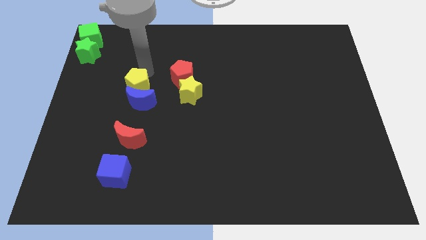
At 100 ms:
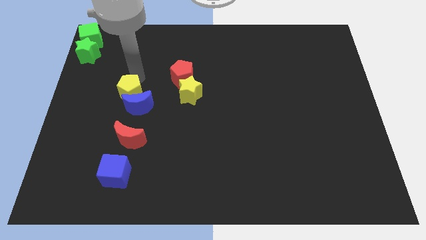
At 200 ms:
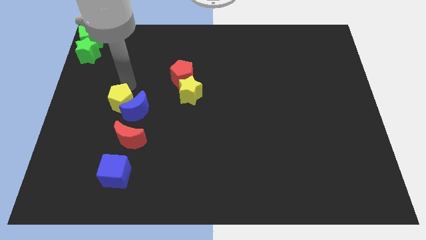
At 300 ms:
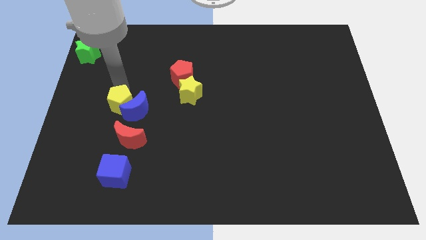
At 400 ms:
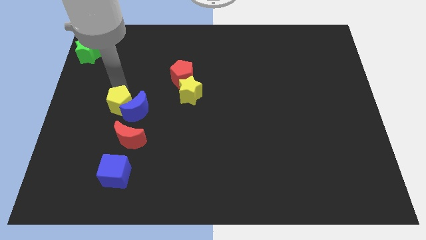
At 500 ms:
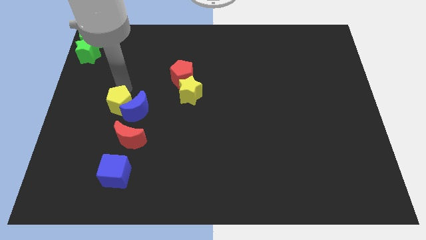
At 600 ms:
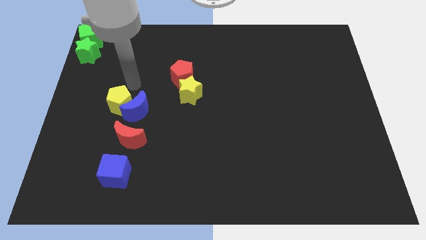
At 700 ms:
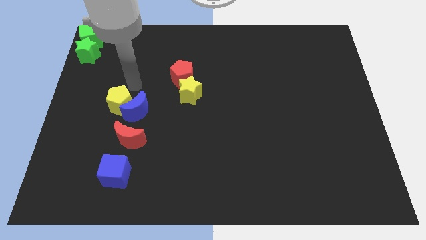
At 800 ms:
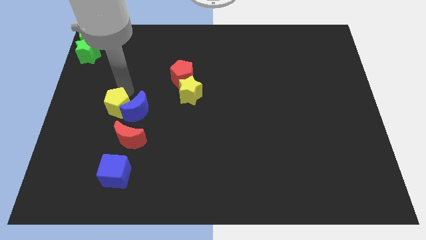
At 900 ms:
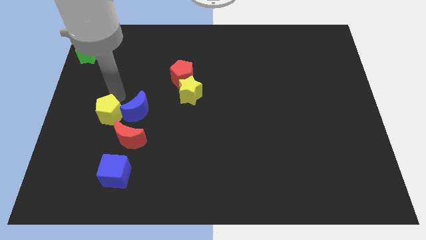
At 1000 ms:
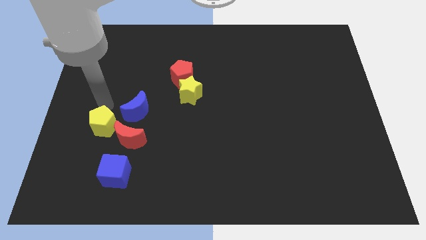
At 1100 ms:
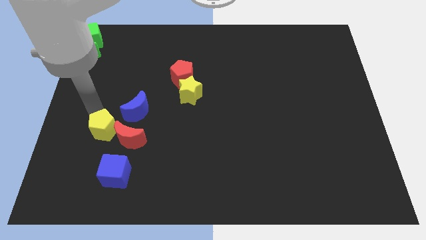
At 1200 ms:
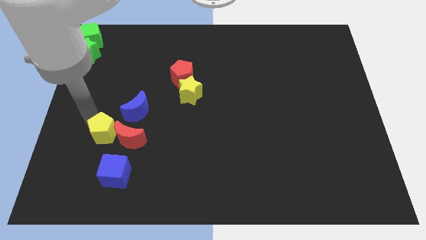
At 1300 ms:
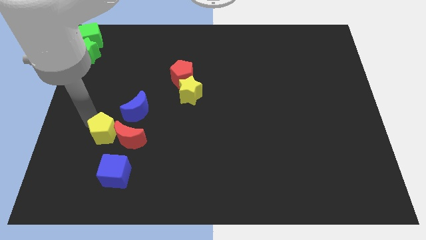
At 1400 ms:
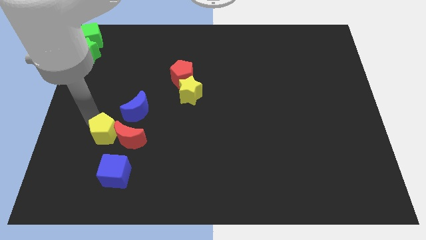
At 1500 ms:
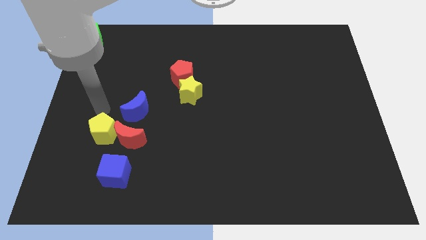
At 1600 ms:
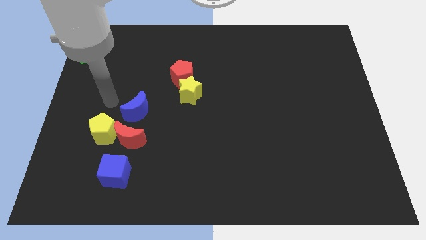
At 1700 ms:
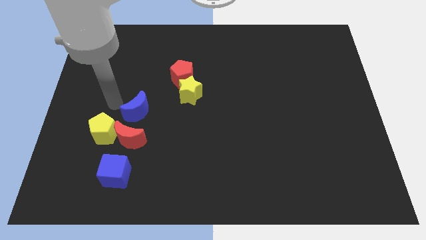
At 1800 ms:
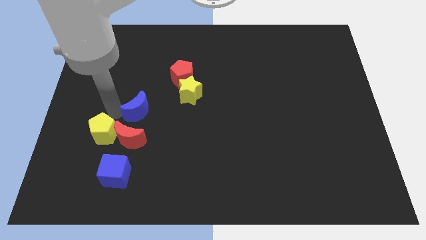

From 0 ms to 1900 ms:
push the yellow pentagon towards the left side of the red crescent

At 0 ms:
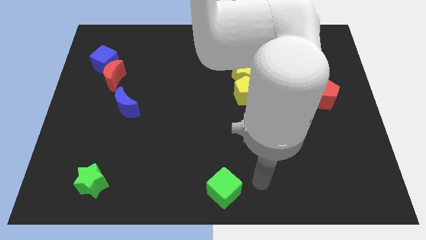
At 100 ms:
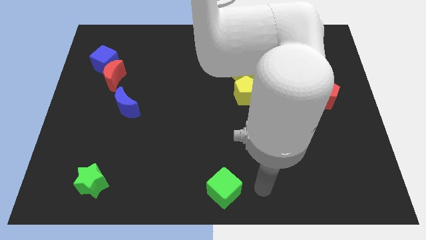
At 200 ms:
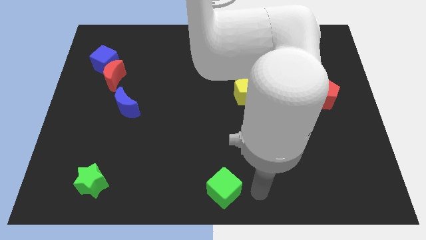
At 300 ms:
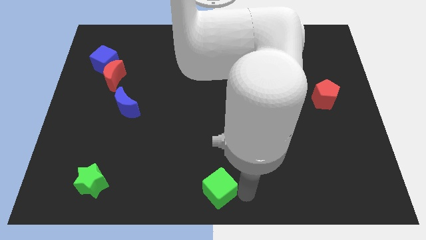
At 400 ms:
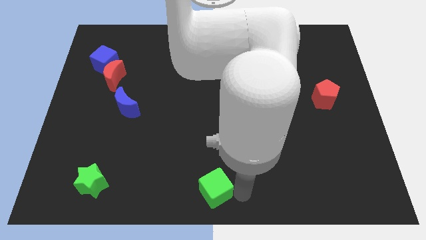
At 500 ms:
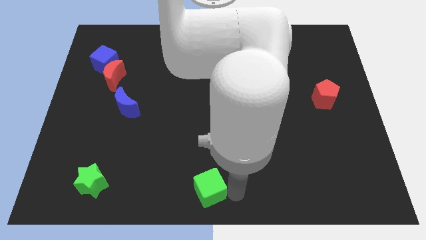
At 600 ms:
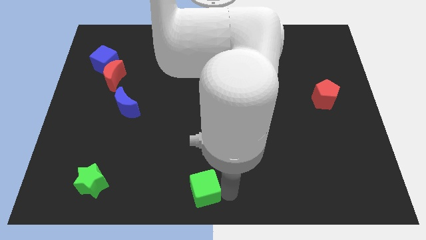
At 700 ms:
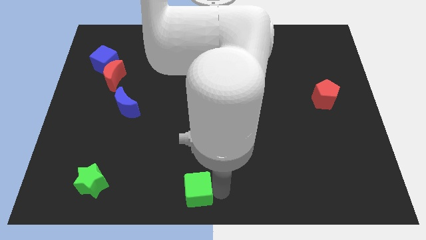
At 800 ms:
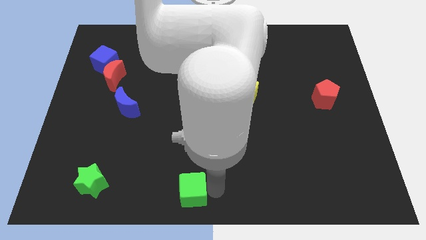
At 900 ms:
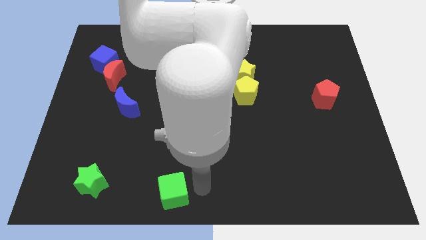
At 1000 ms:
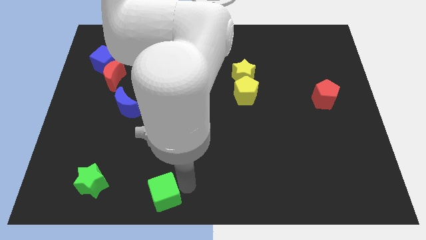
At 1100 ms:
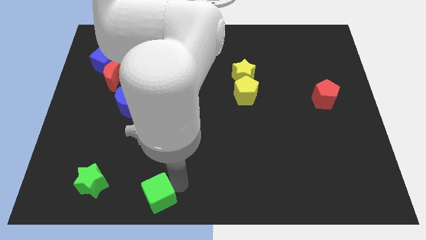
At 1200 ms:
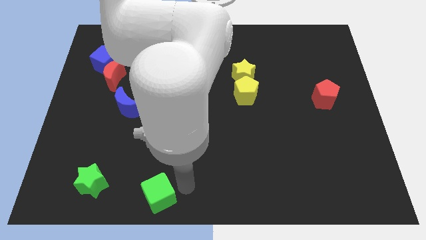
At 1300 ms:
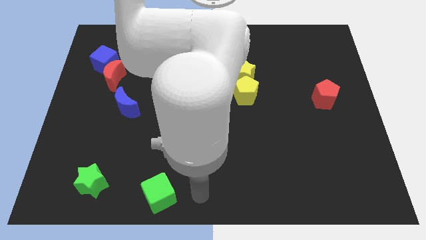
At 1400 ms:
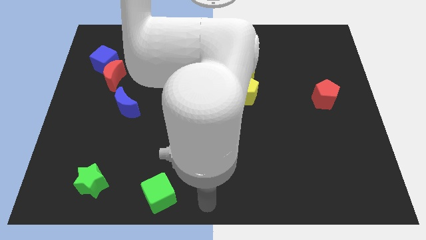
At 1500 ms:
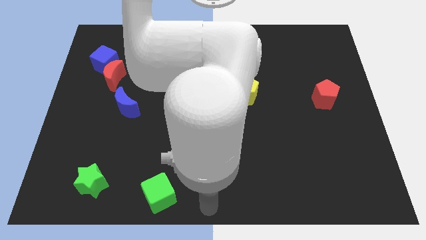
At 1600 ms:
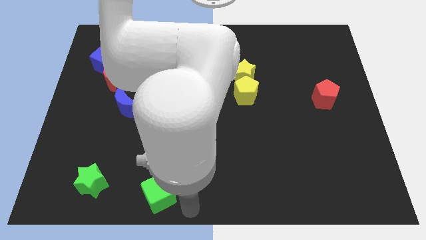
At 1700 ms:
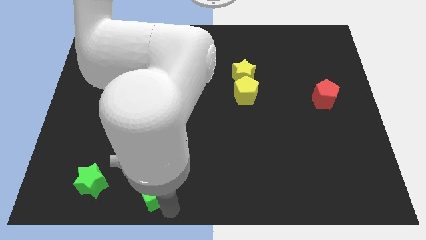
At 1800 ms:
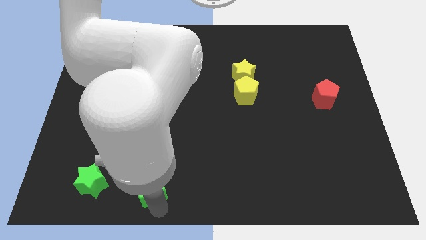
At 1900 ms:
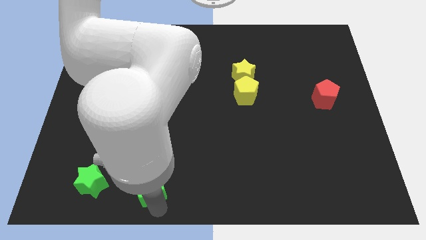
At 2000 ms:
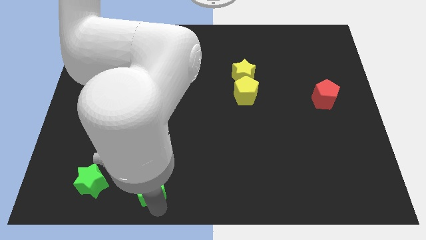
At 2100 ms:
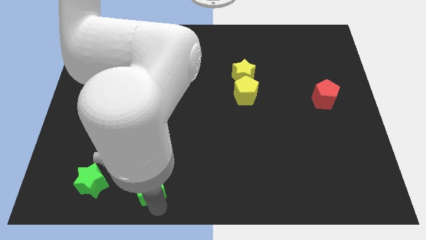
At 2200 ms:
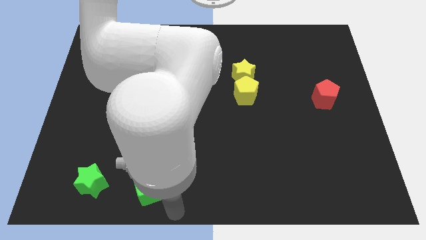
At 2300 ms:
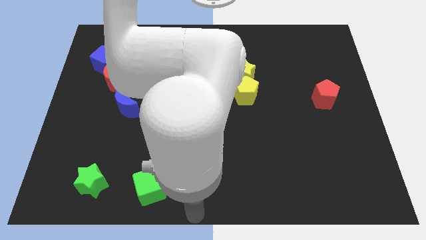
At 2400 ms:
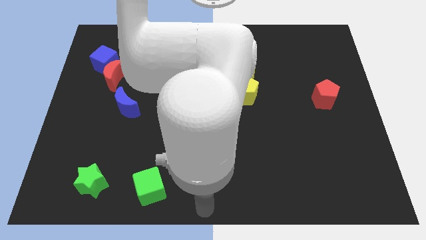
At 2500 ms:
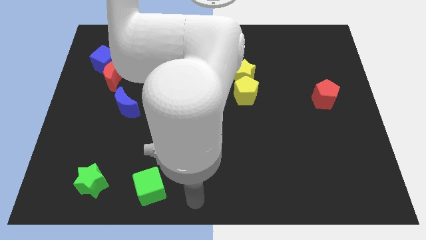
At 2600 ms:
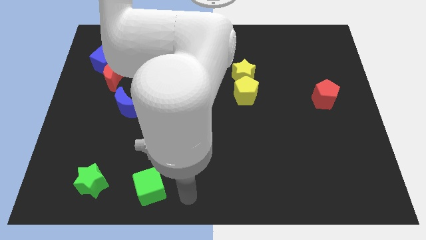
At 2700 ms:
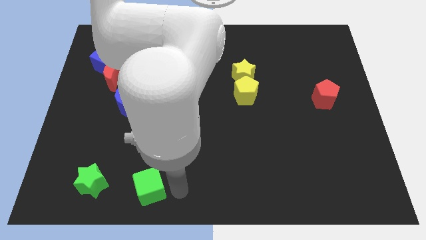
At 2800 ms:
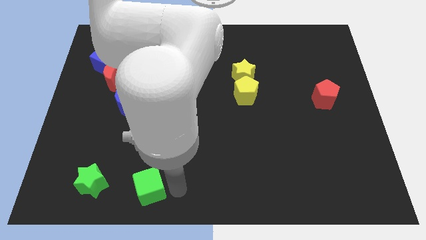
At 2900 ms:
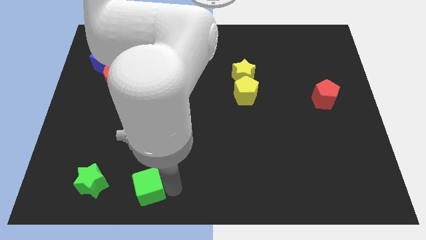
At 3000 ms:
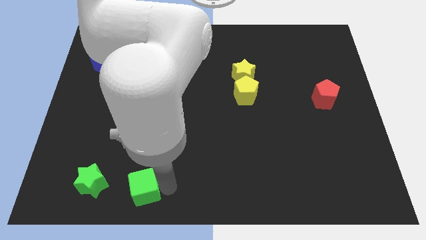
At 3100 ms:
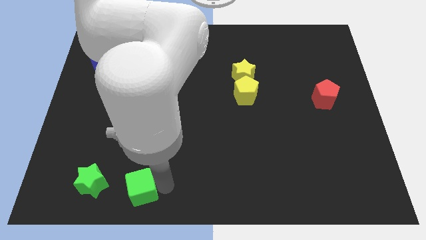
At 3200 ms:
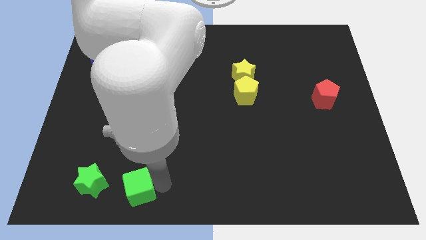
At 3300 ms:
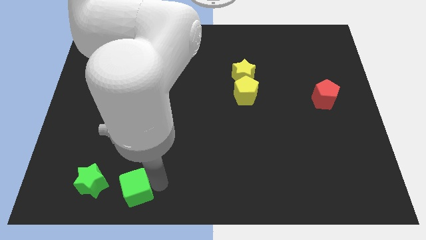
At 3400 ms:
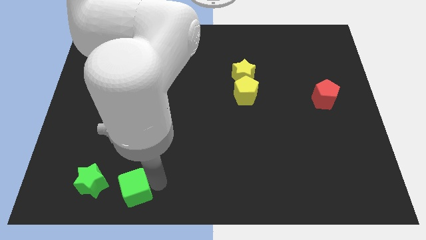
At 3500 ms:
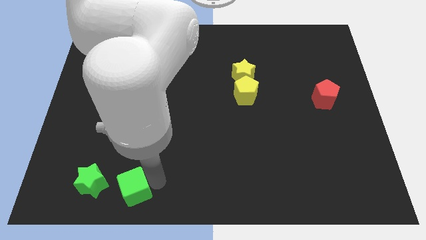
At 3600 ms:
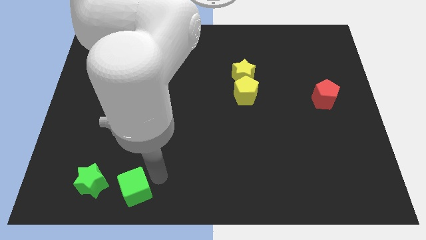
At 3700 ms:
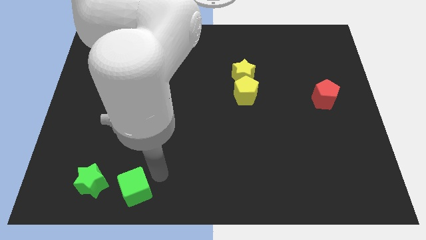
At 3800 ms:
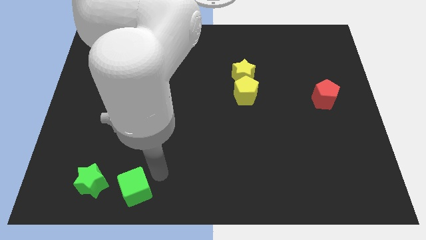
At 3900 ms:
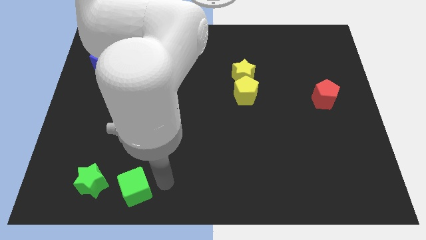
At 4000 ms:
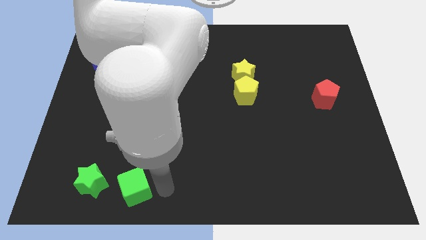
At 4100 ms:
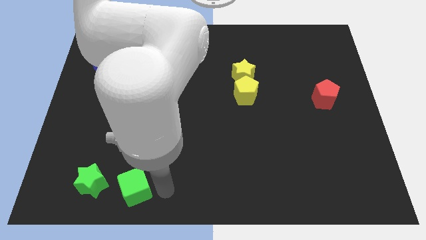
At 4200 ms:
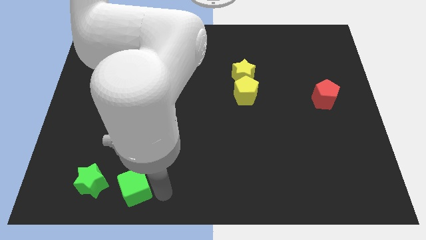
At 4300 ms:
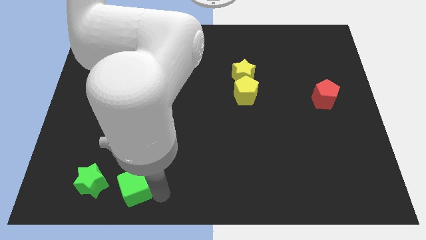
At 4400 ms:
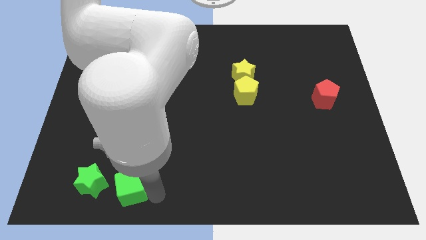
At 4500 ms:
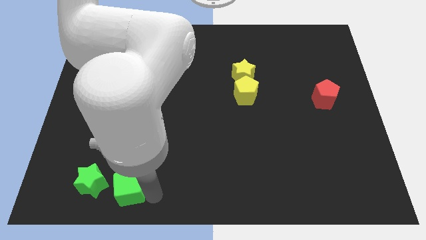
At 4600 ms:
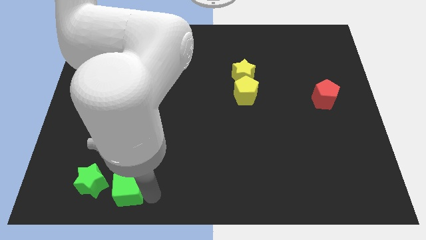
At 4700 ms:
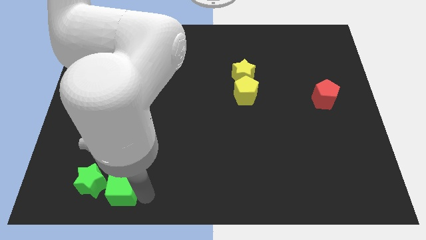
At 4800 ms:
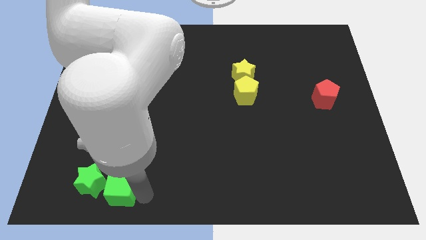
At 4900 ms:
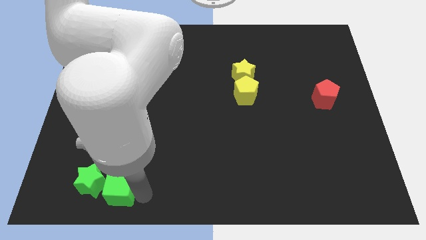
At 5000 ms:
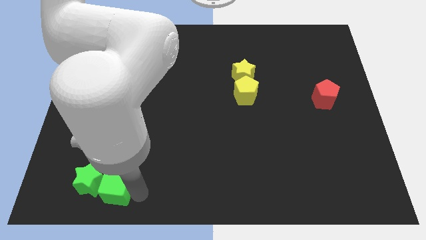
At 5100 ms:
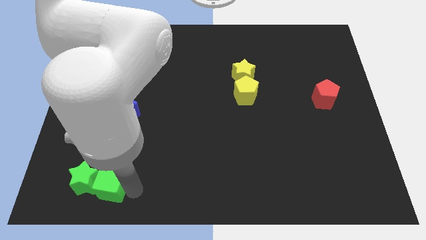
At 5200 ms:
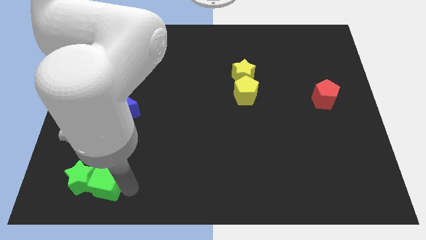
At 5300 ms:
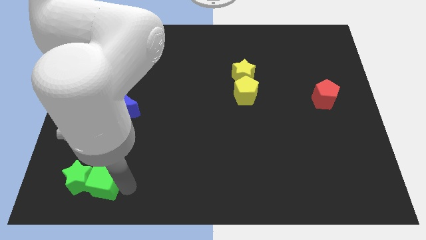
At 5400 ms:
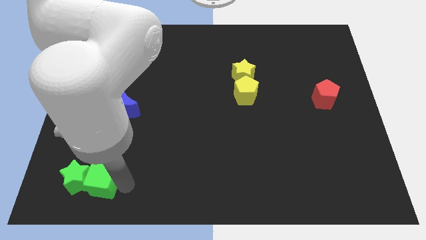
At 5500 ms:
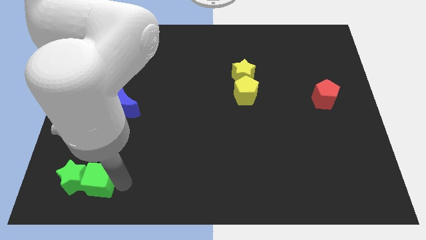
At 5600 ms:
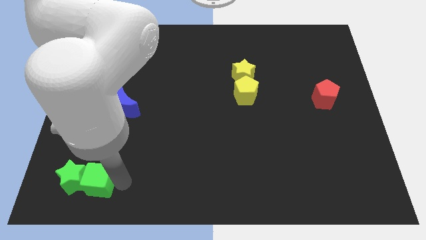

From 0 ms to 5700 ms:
push the green cube into the green star

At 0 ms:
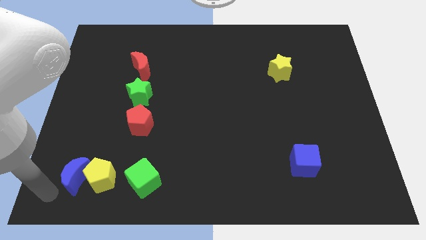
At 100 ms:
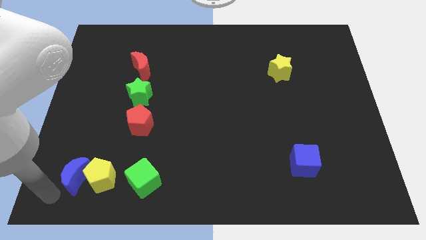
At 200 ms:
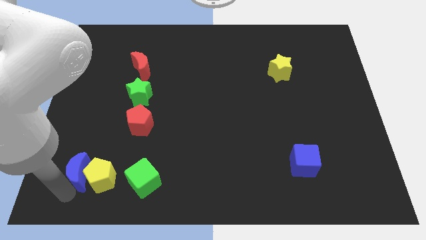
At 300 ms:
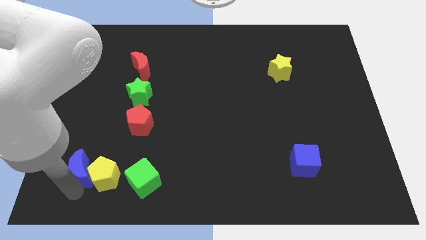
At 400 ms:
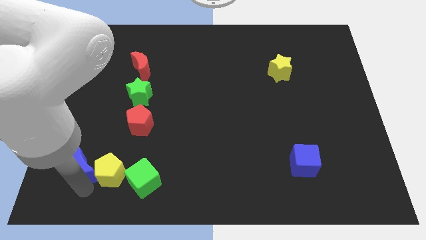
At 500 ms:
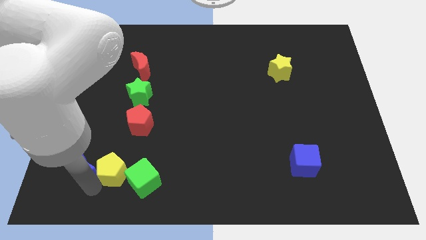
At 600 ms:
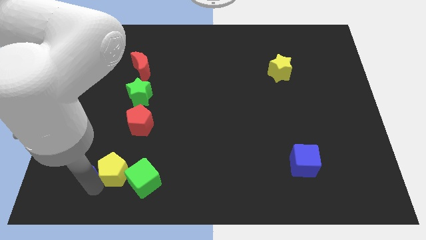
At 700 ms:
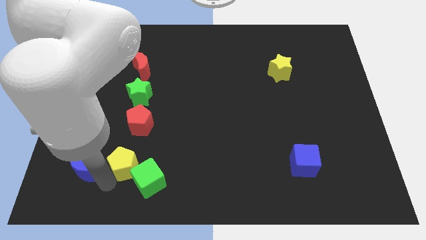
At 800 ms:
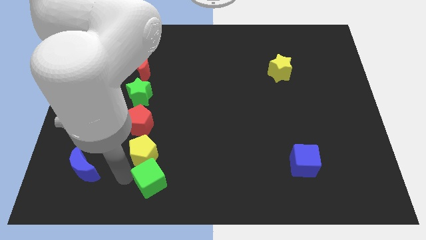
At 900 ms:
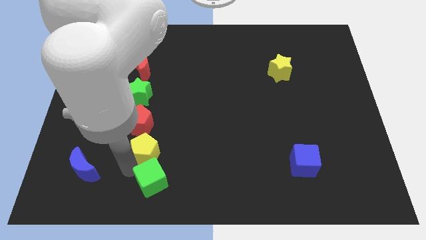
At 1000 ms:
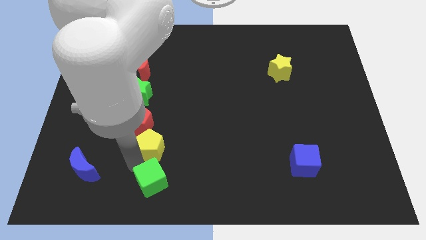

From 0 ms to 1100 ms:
place yellow pentagon to the top of green cube

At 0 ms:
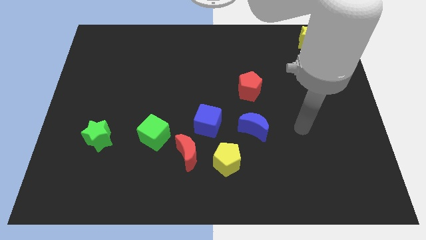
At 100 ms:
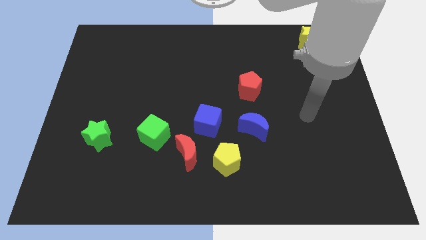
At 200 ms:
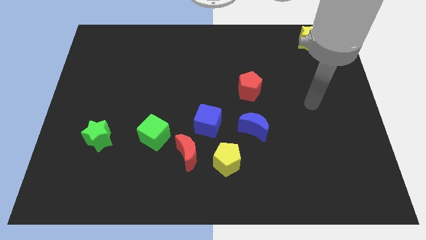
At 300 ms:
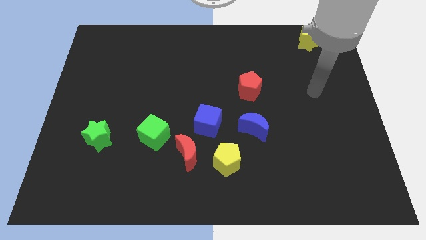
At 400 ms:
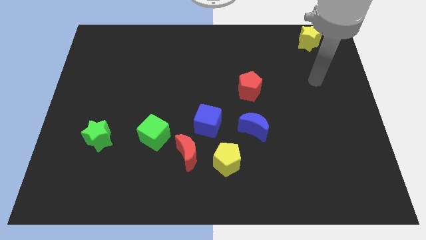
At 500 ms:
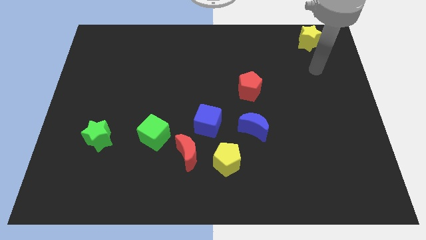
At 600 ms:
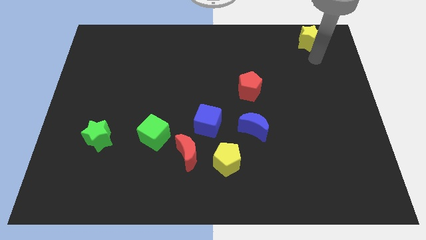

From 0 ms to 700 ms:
move your hand close to the yellow star
